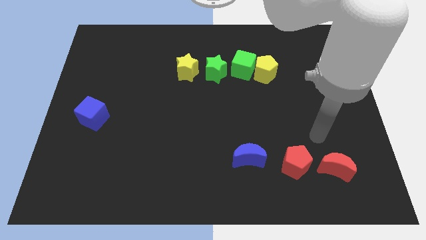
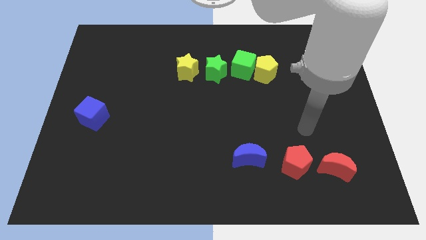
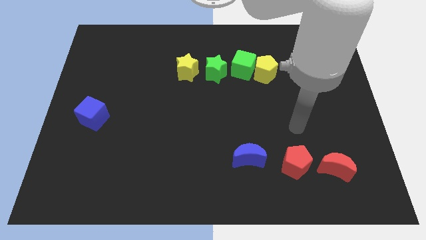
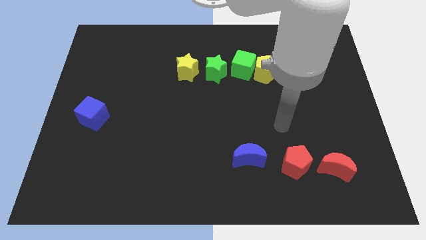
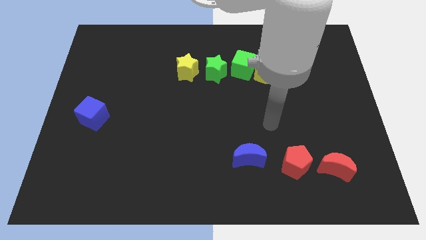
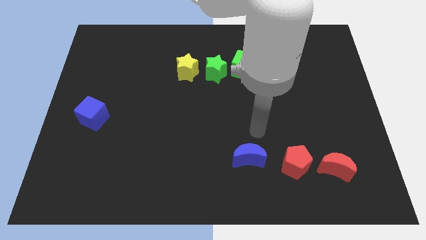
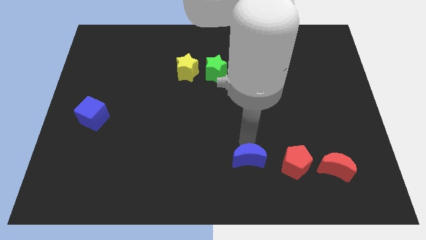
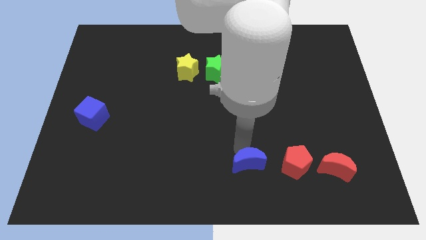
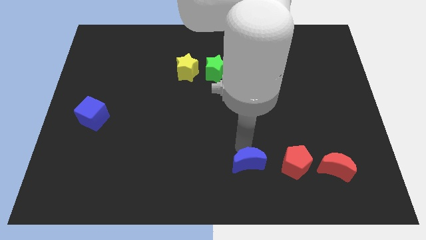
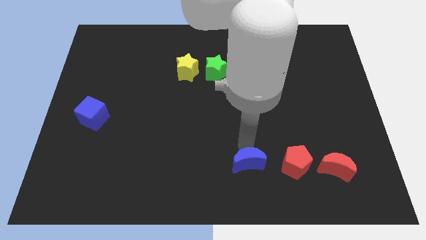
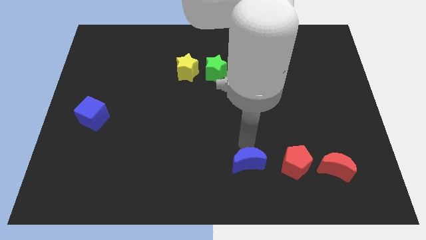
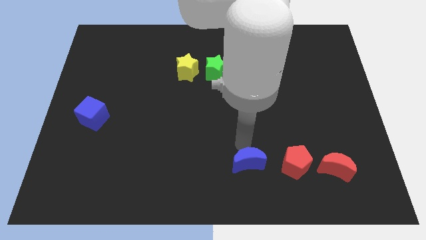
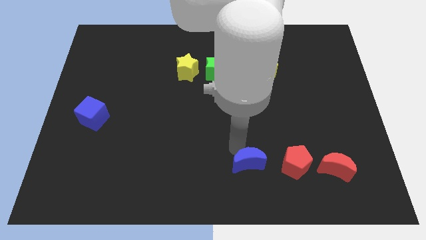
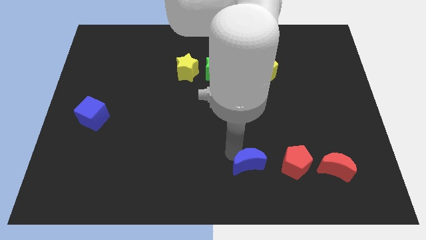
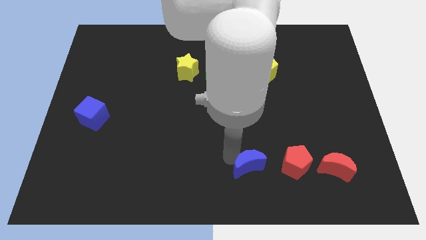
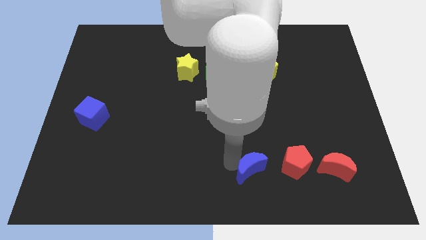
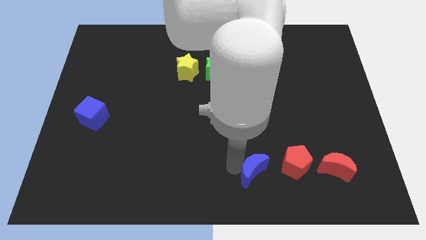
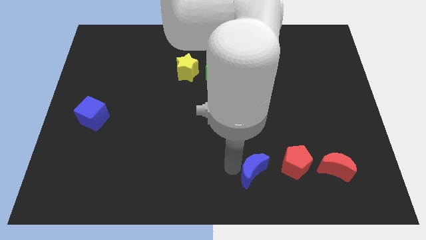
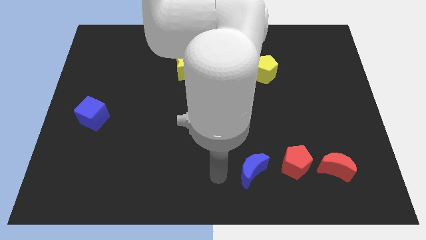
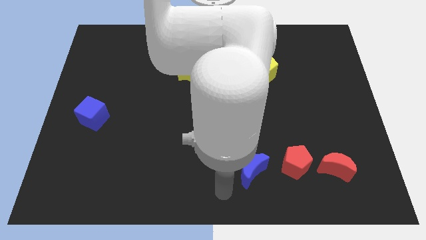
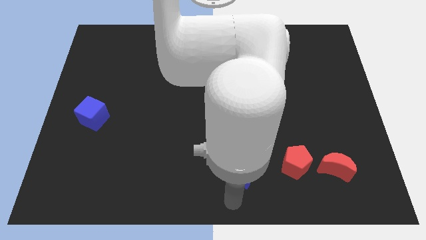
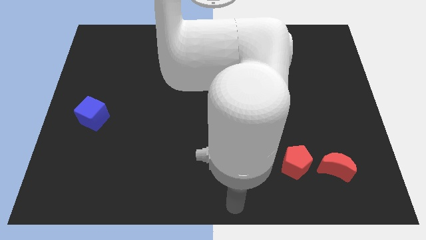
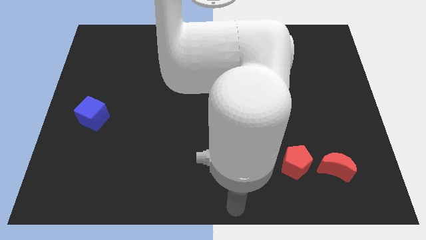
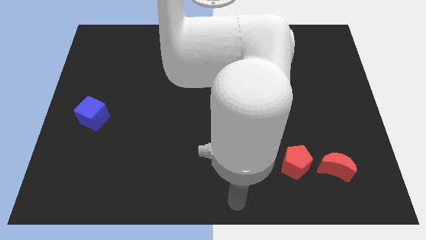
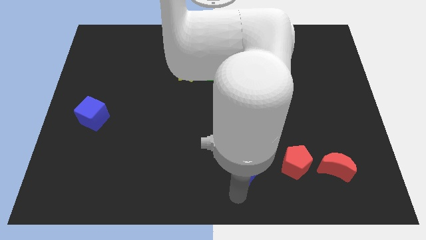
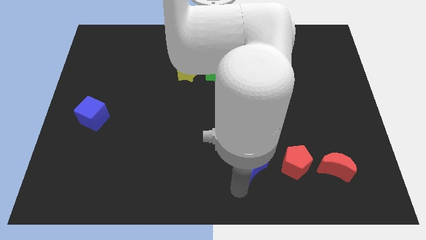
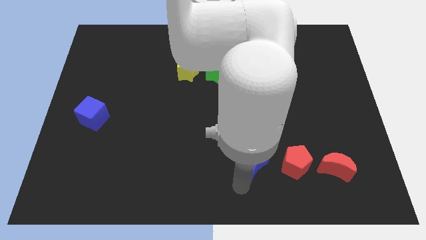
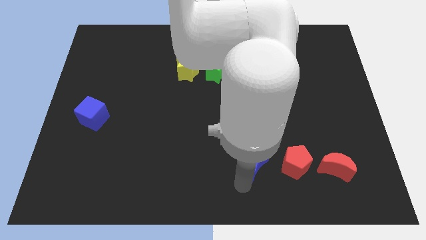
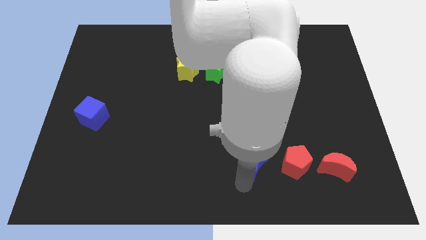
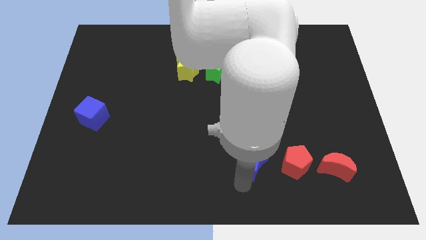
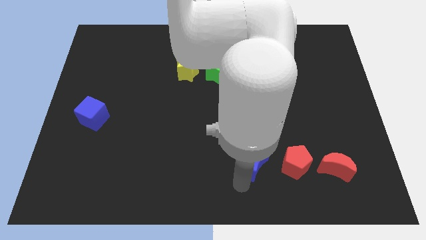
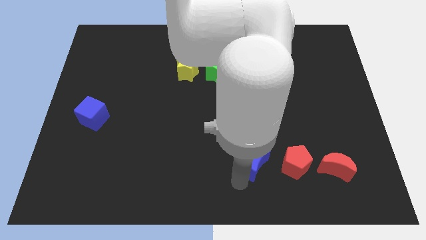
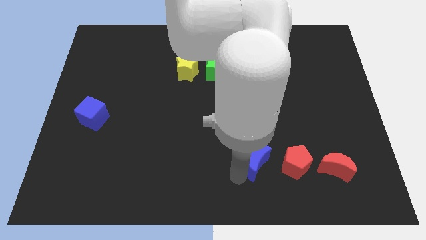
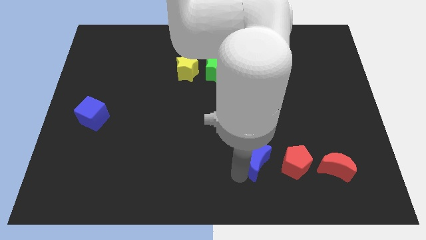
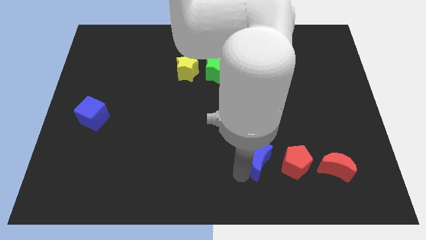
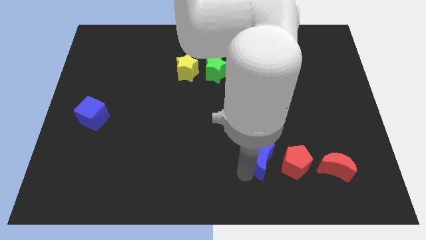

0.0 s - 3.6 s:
move the blue crescent down to the yellow pentagon

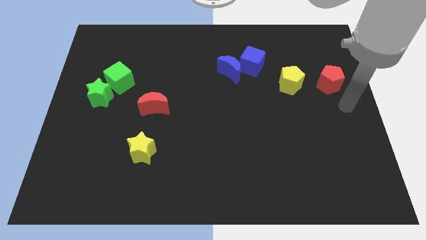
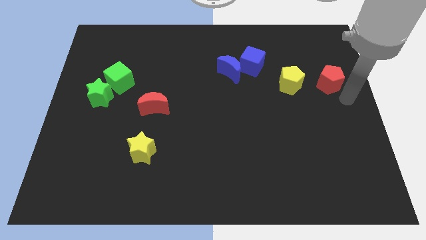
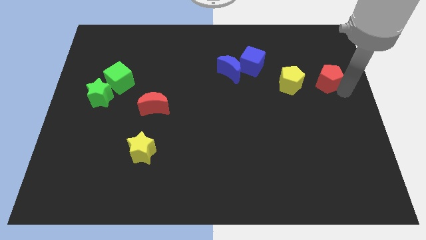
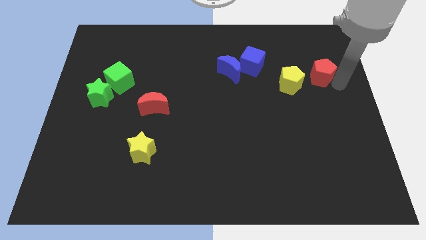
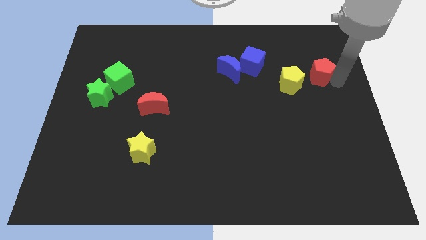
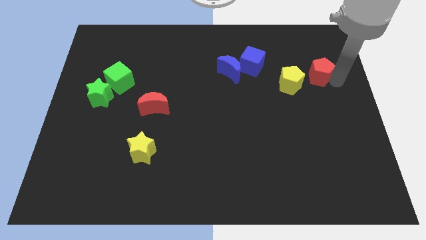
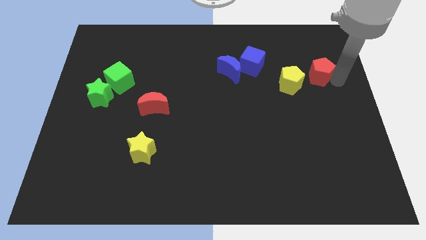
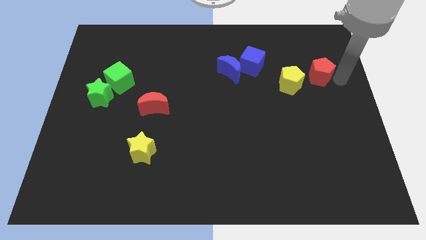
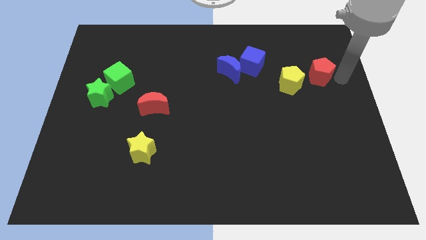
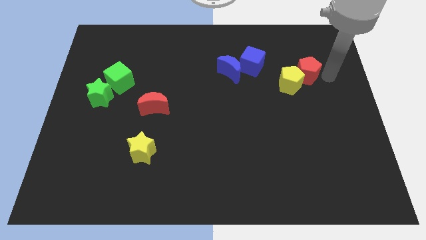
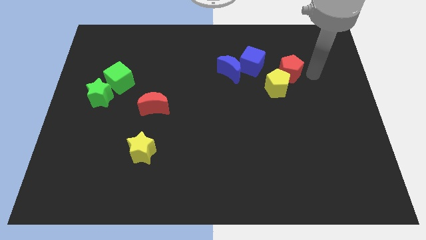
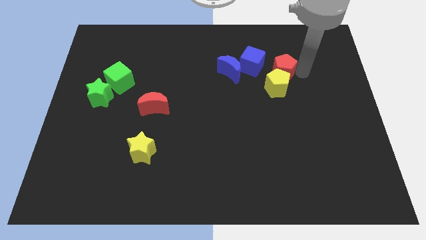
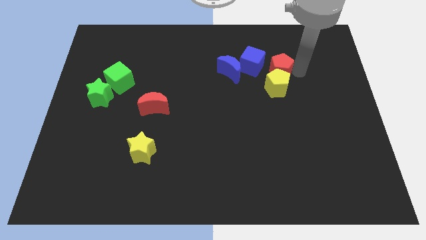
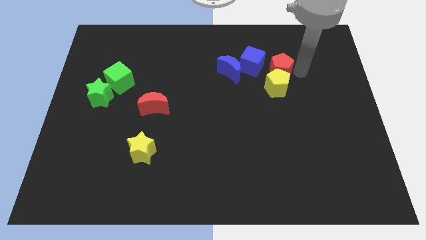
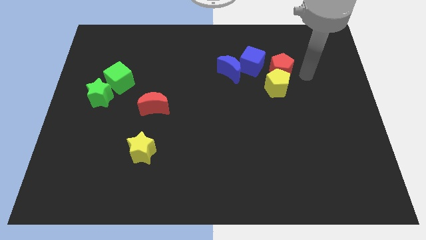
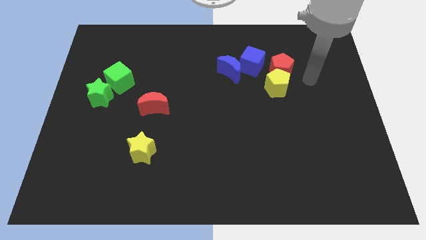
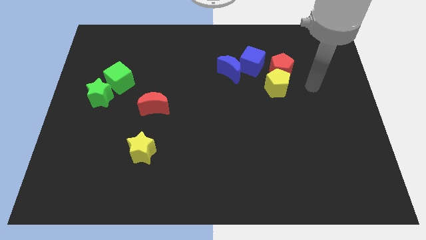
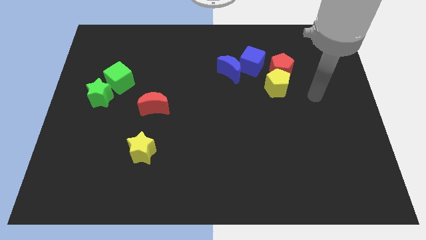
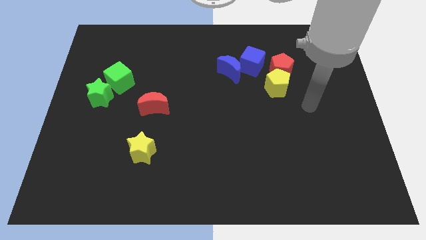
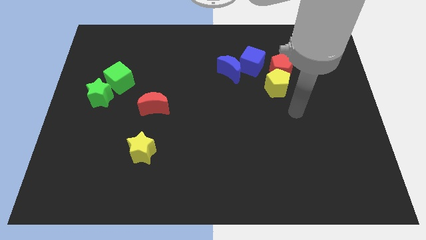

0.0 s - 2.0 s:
push the pentagons to the right of blue cube

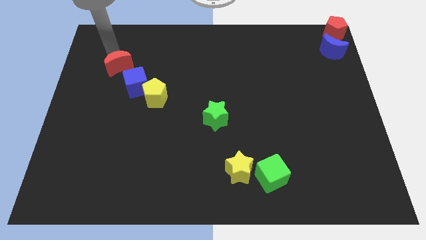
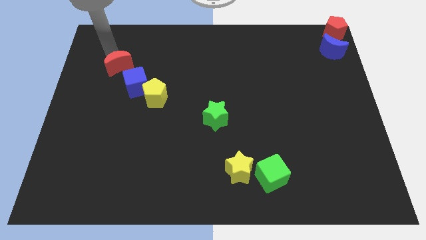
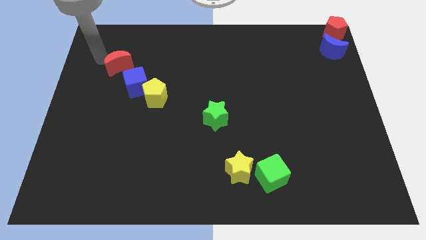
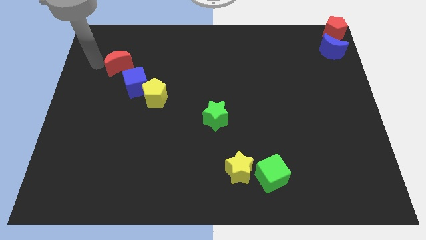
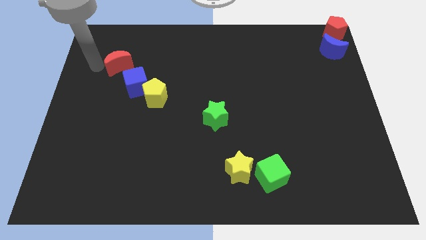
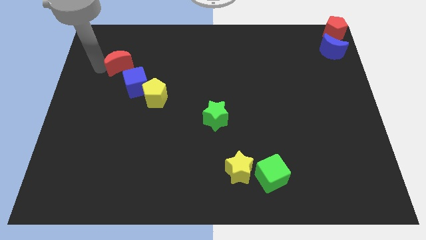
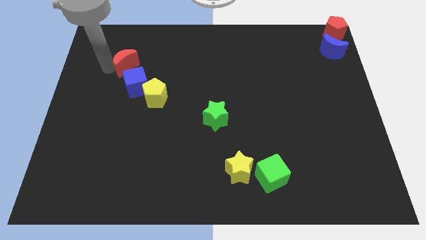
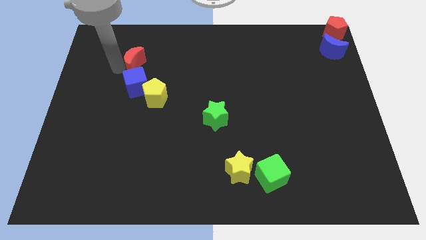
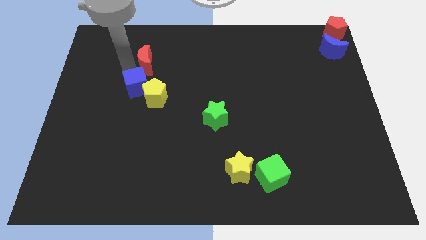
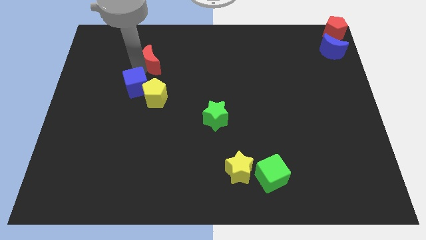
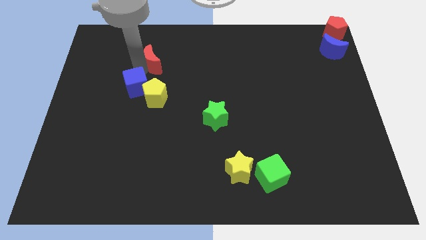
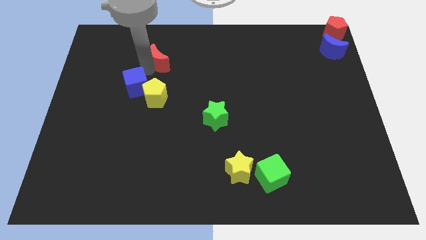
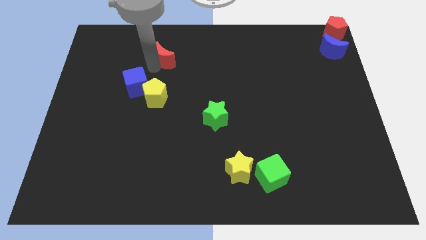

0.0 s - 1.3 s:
move the red crescent above the yellow pentagon

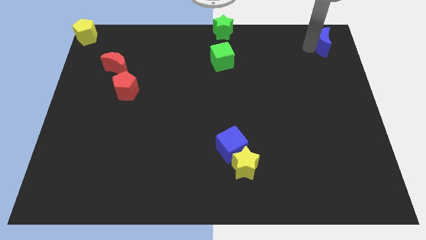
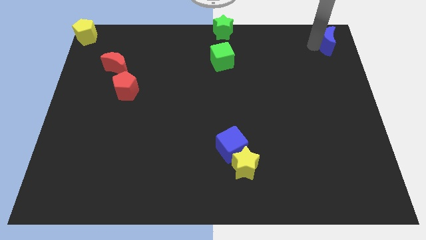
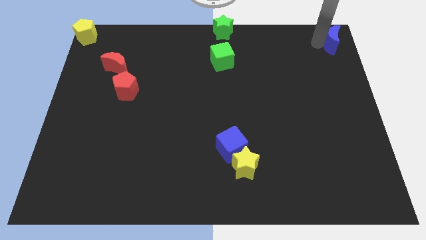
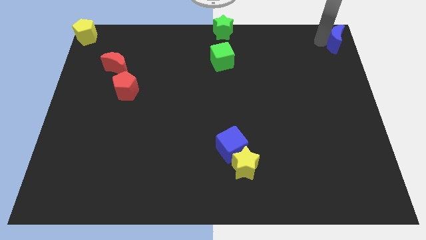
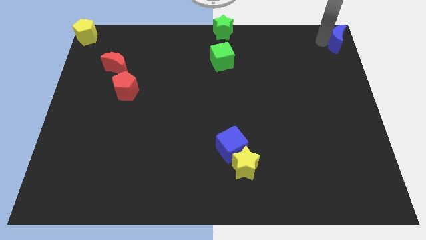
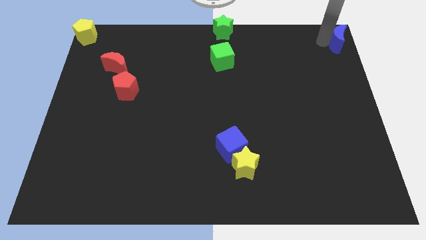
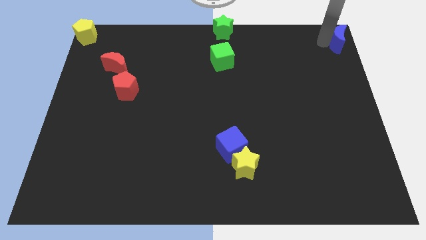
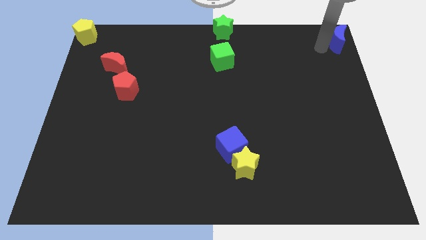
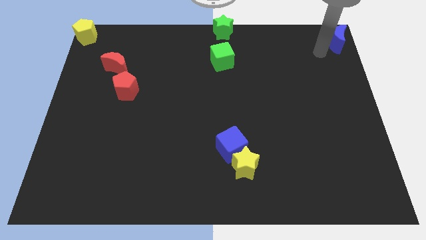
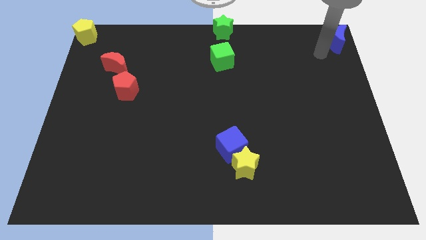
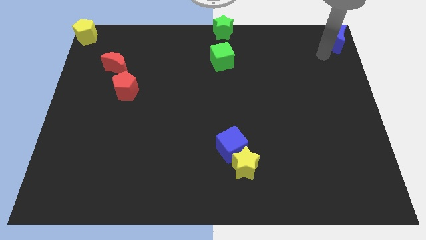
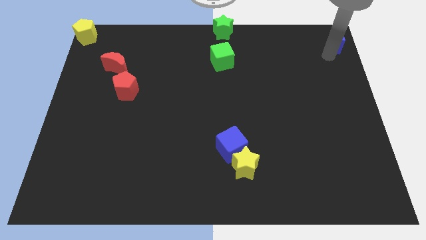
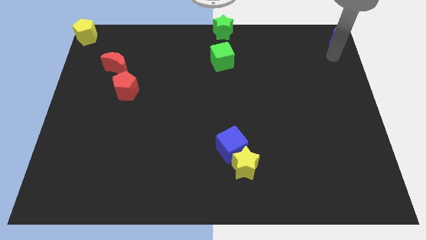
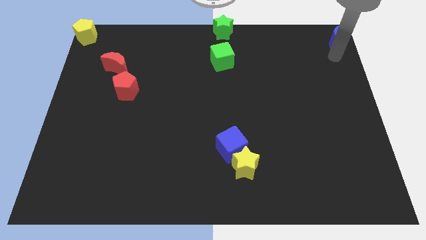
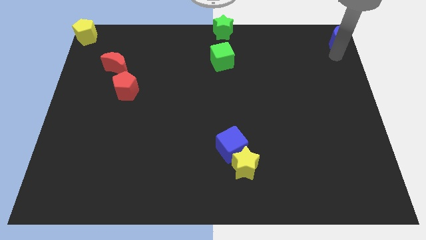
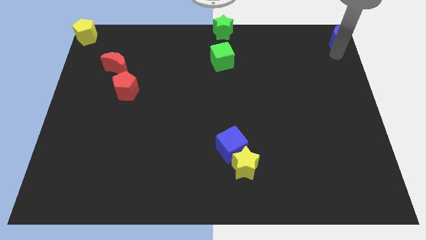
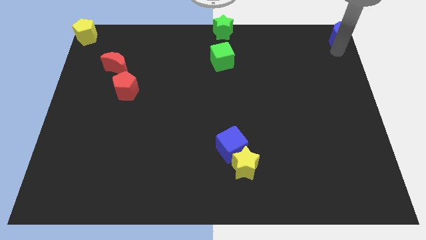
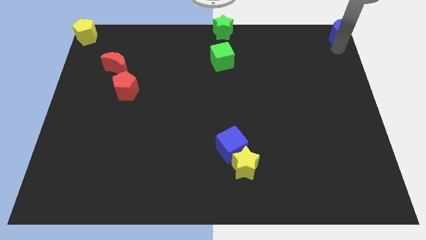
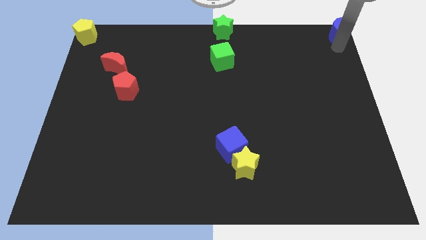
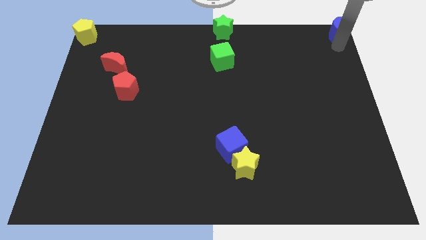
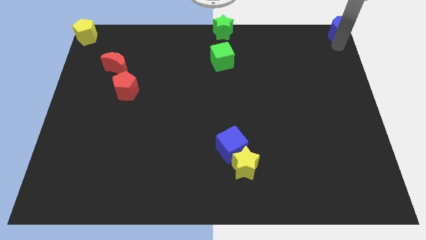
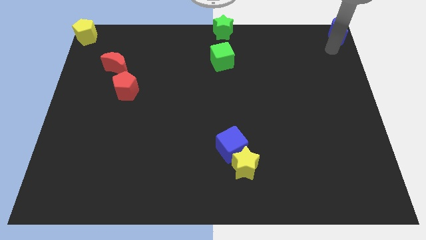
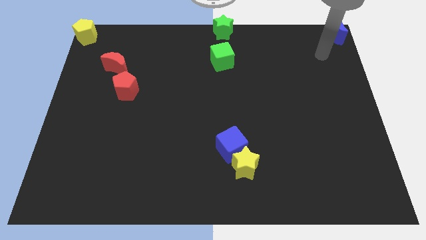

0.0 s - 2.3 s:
push blue moon towards top right corner of the board
